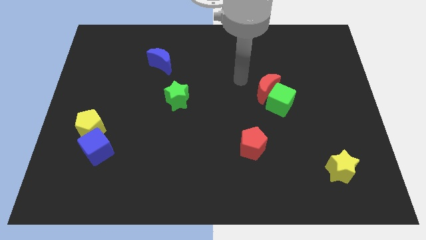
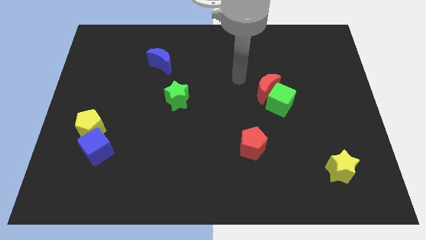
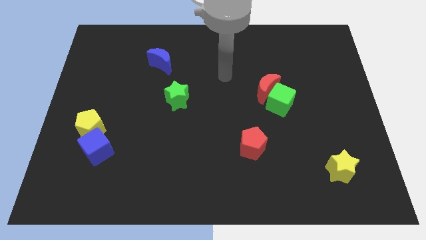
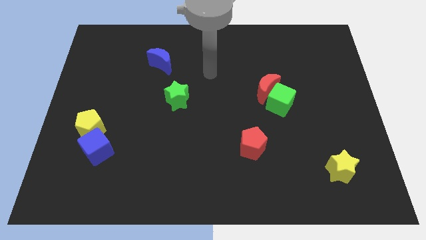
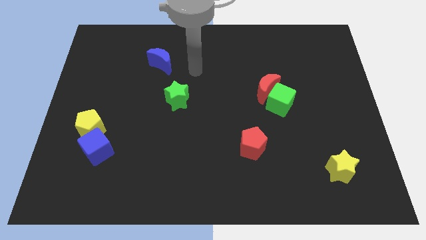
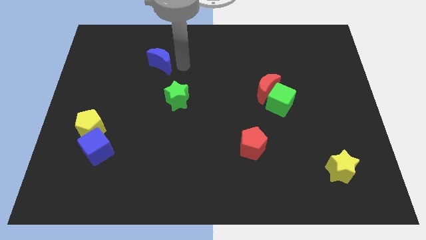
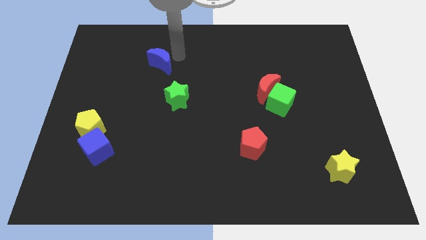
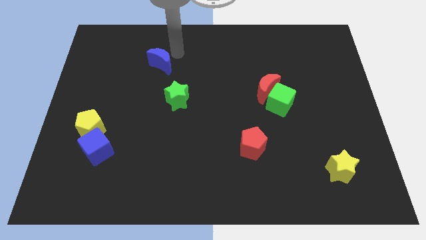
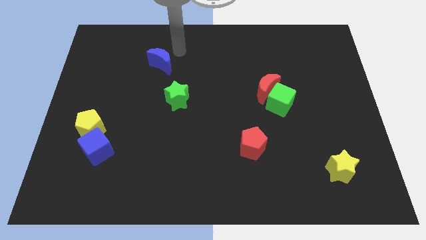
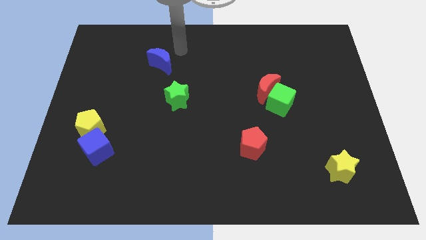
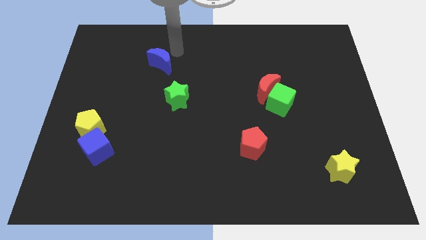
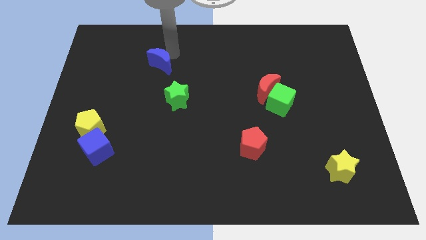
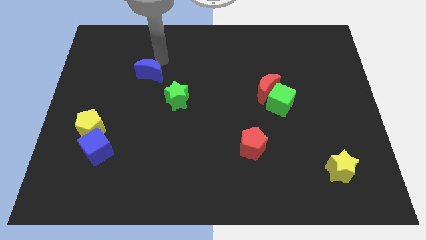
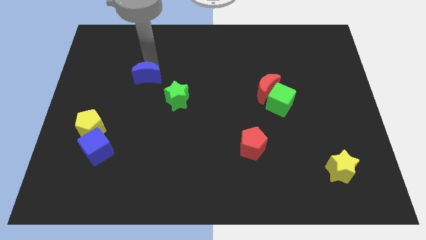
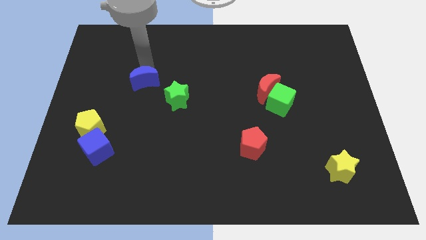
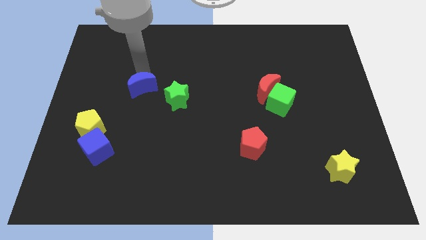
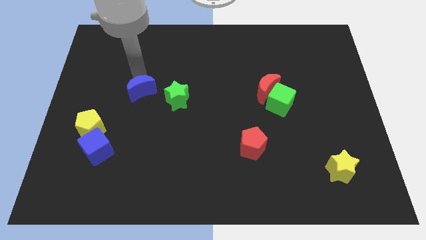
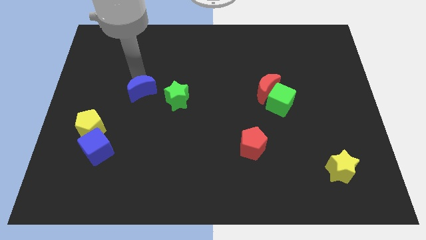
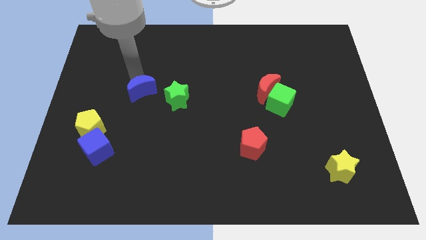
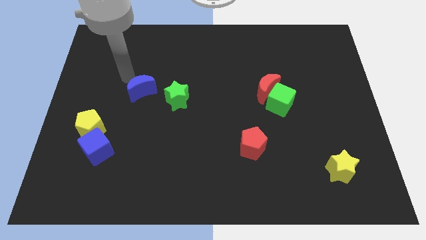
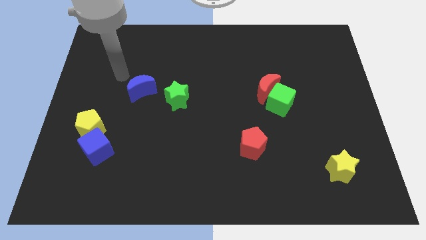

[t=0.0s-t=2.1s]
place the blue moon to the top left of the green star

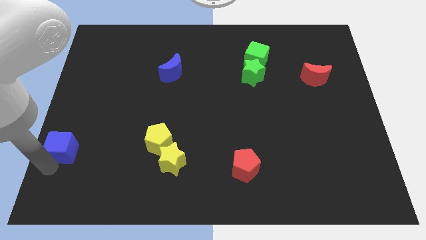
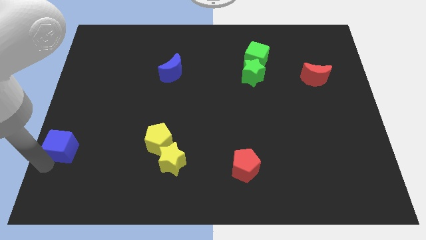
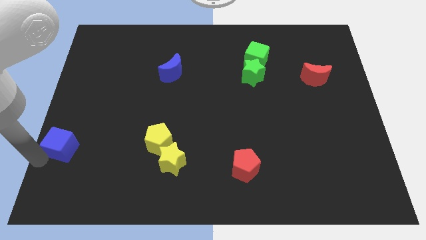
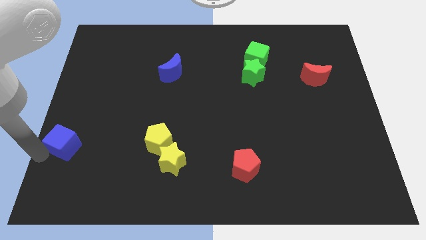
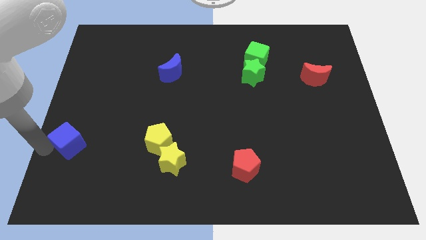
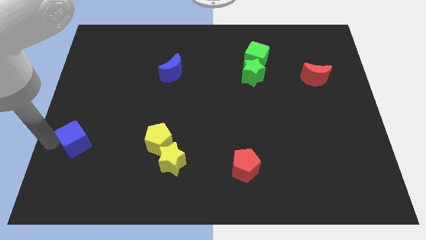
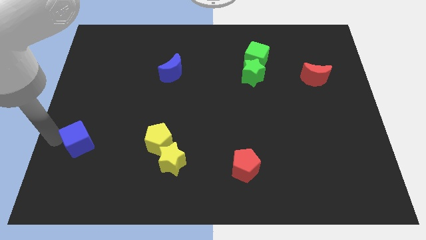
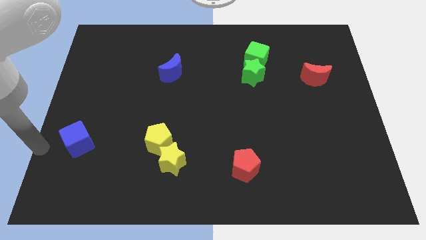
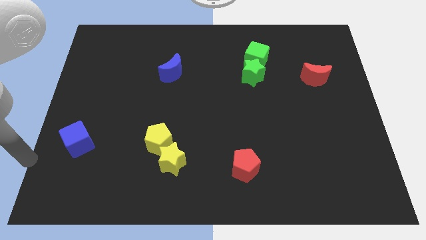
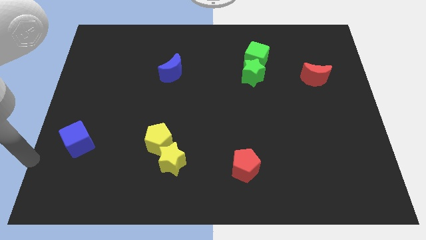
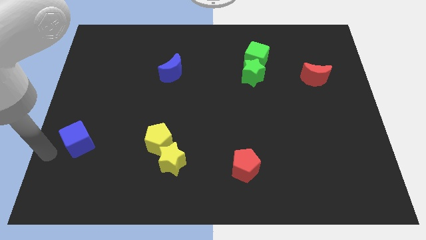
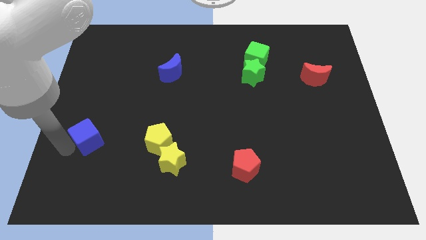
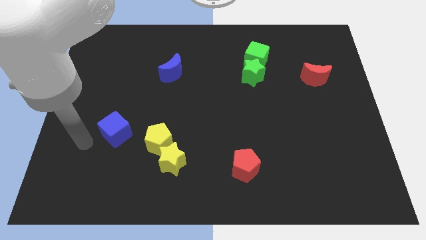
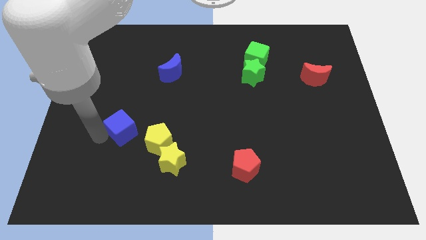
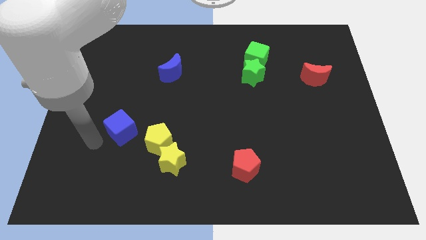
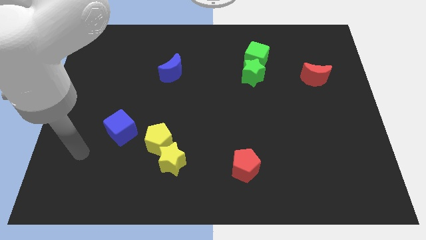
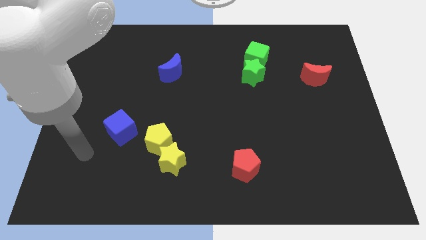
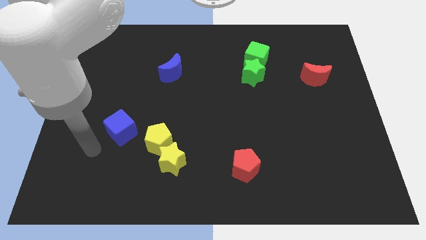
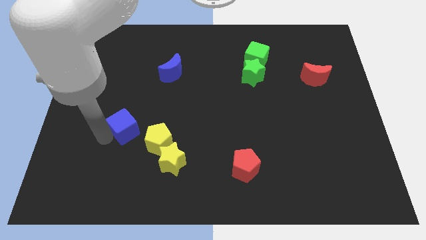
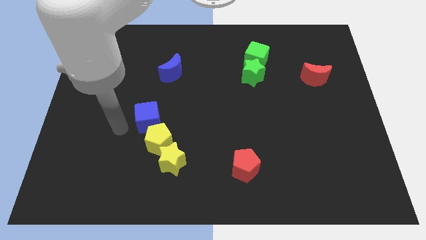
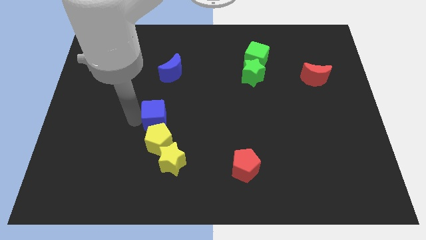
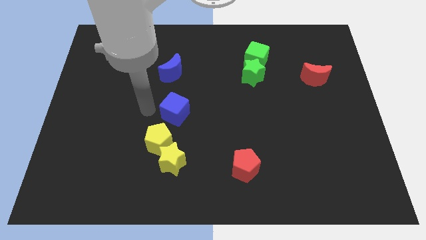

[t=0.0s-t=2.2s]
put the blue cube above the yellow pentagon

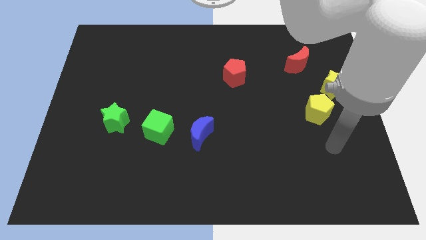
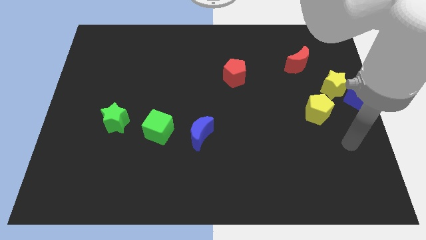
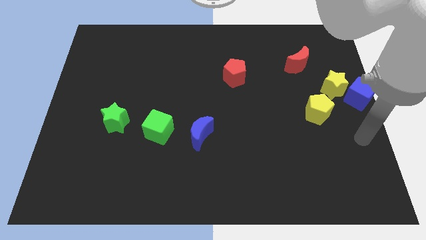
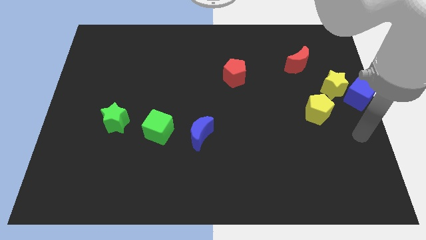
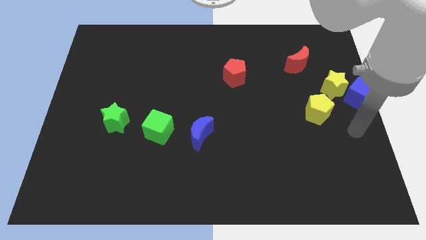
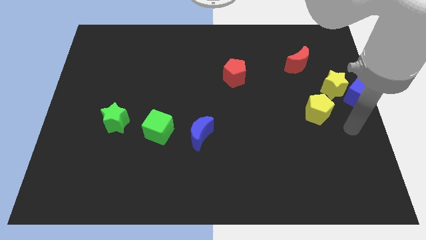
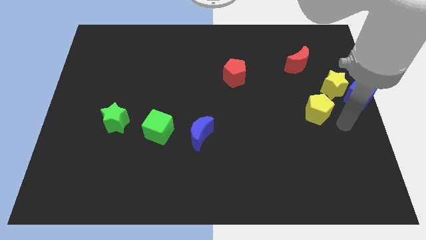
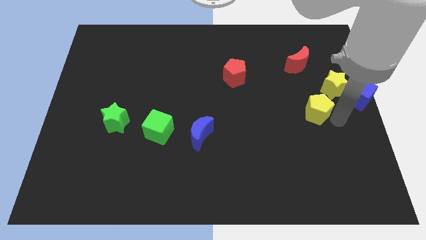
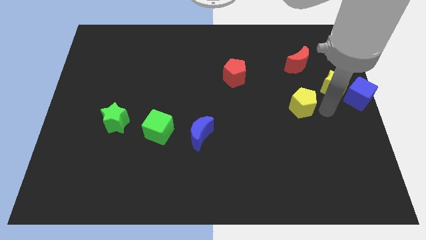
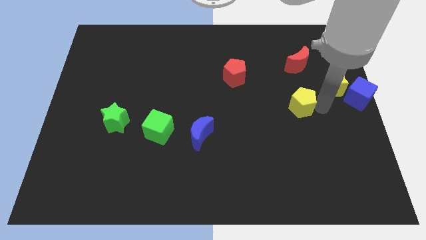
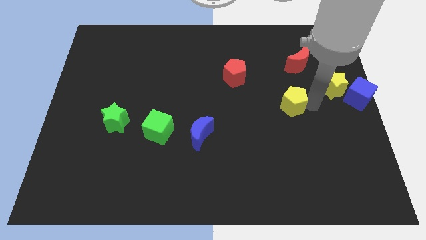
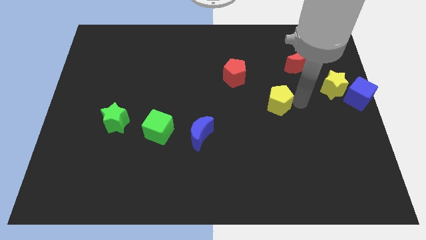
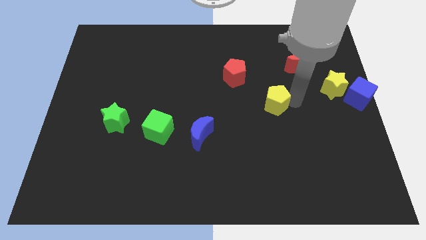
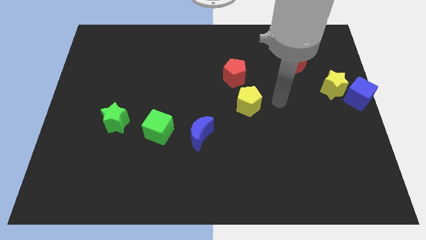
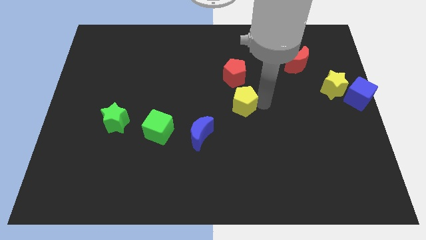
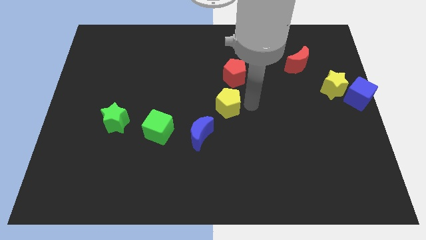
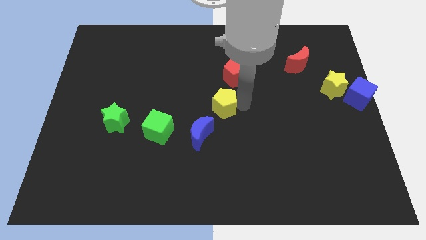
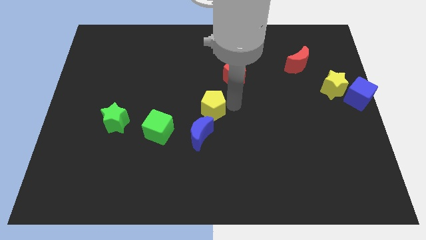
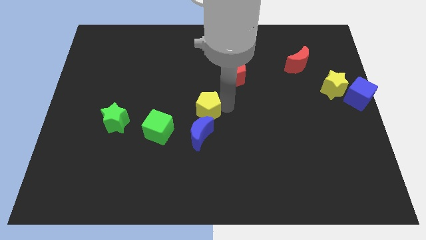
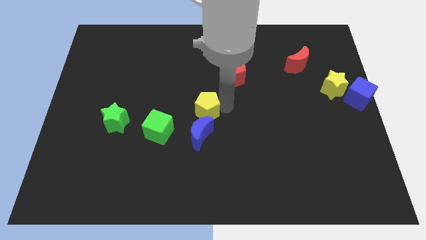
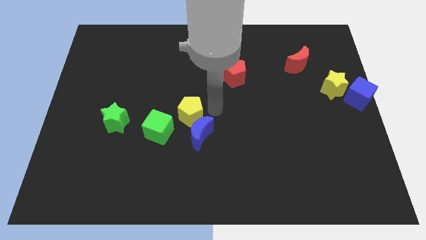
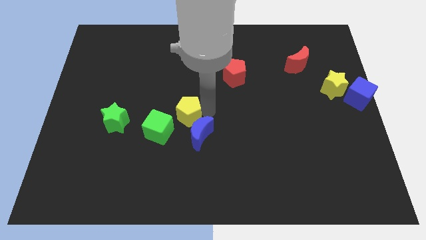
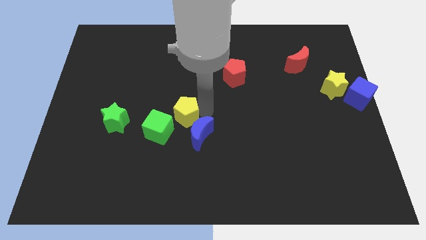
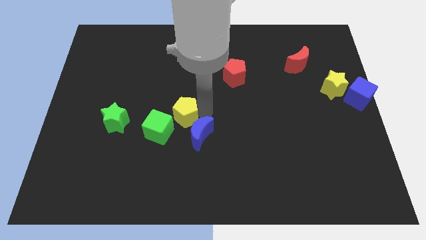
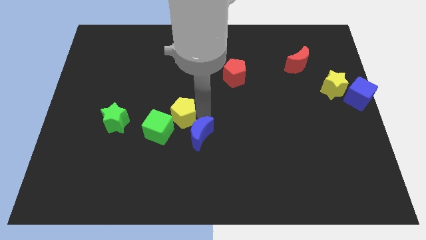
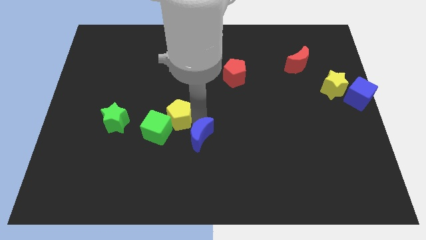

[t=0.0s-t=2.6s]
push yellow pentagon into green cube

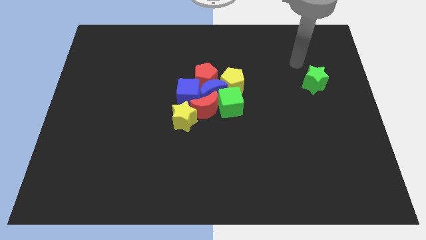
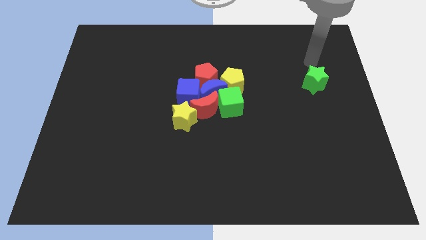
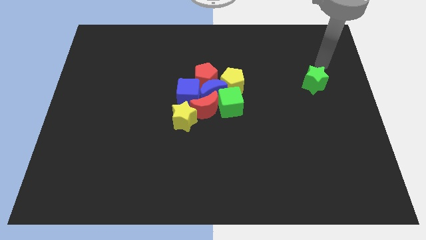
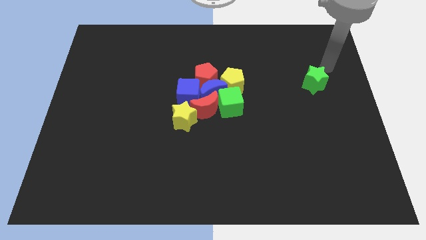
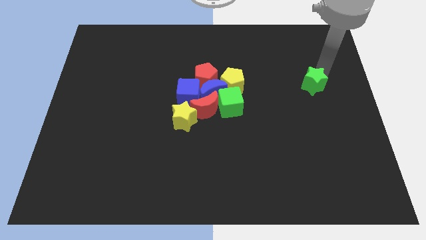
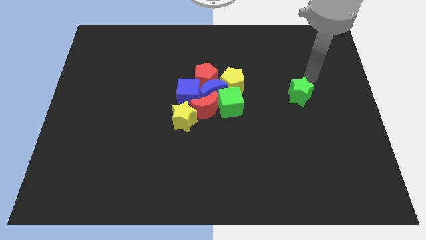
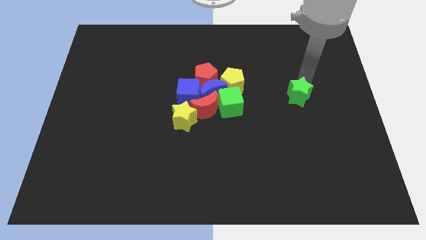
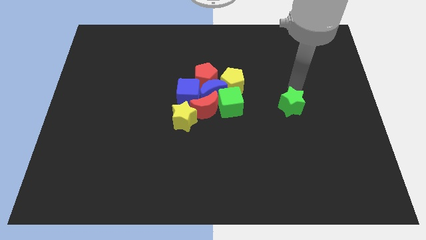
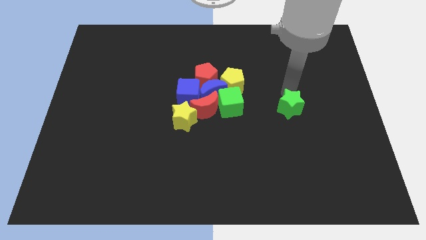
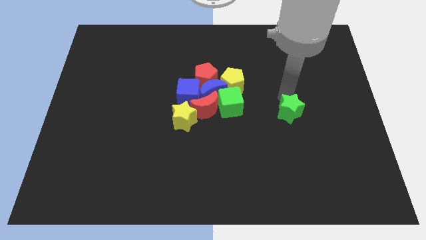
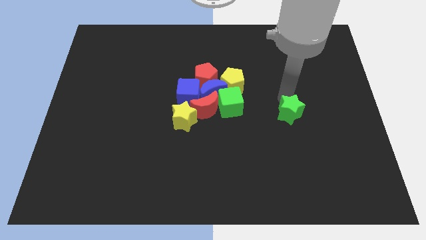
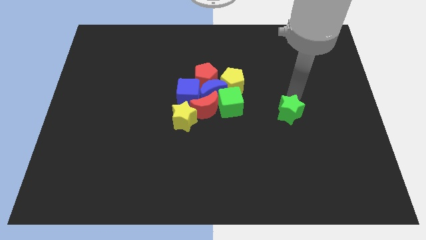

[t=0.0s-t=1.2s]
push the green star downwards

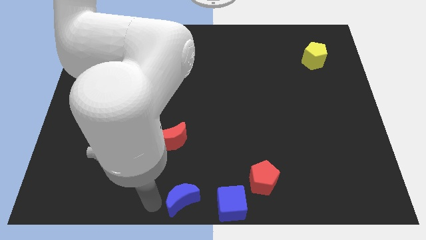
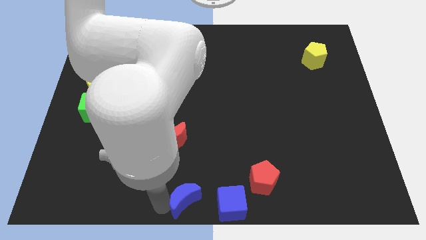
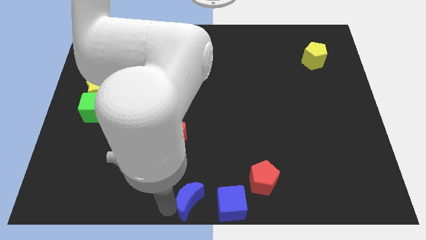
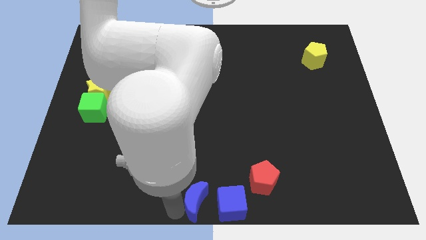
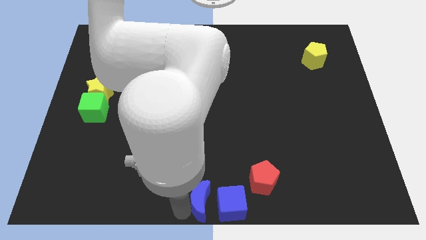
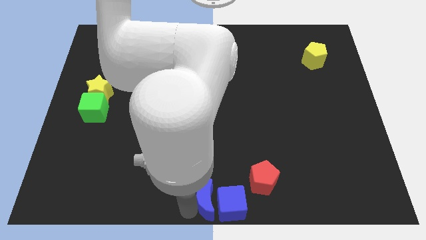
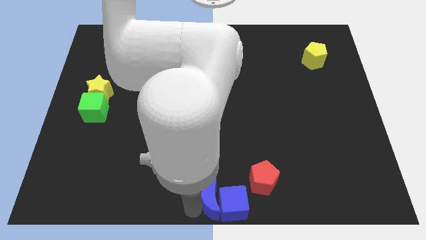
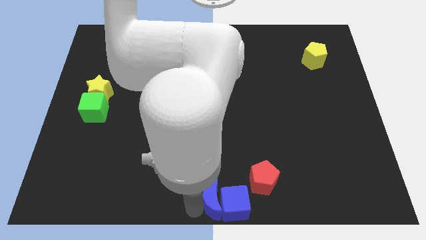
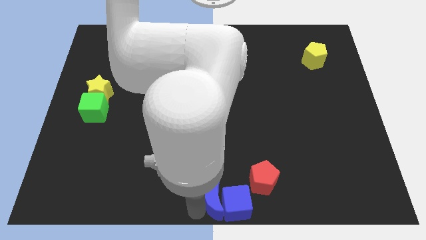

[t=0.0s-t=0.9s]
push the blue crescent to the left of the blue cube

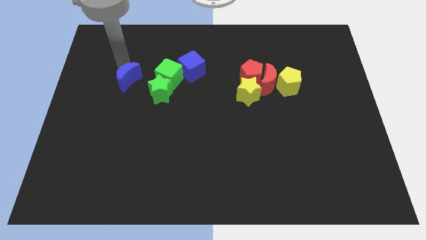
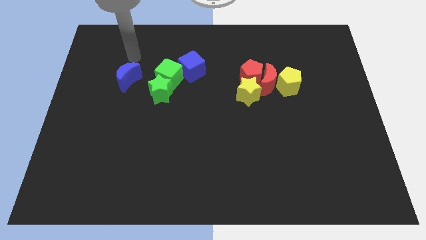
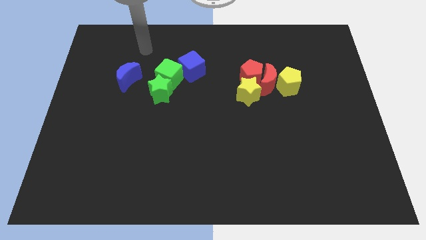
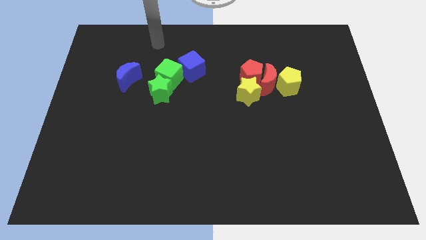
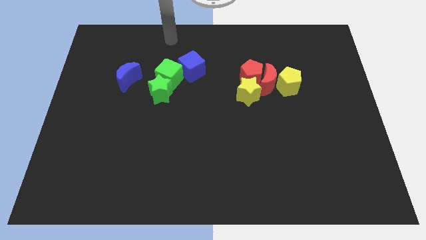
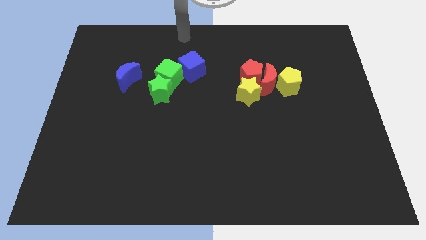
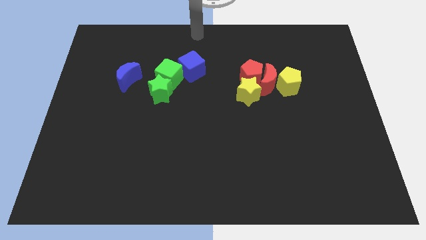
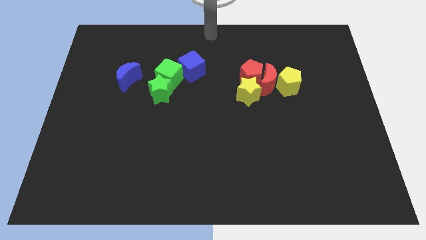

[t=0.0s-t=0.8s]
move yourself to the top center of the board
